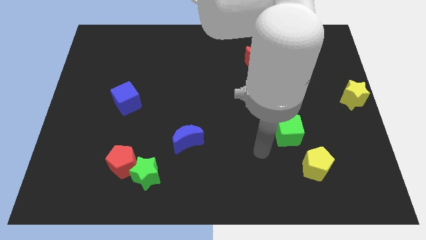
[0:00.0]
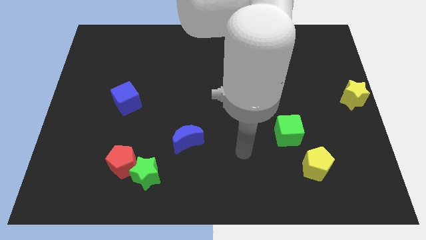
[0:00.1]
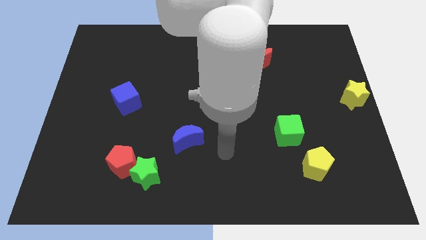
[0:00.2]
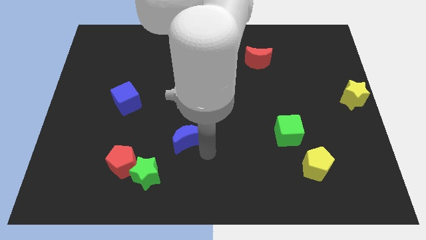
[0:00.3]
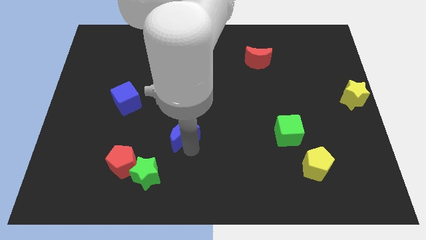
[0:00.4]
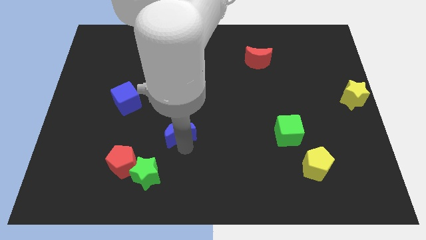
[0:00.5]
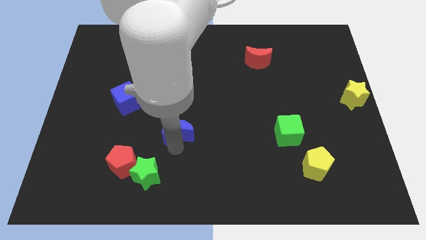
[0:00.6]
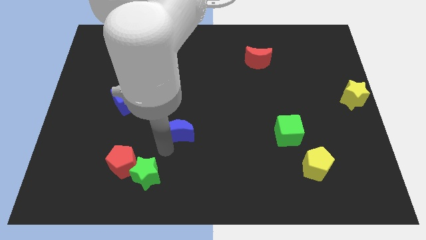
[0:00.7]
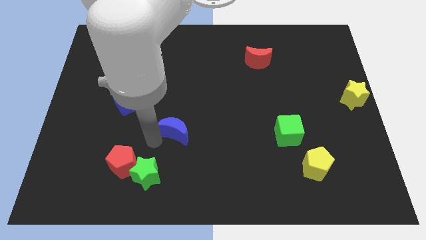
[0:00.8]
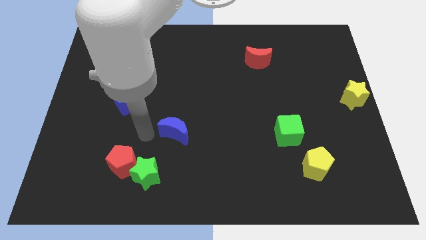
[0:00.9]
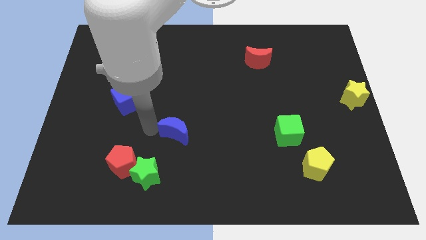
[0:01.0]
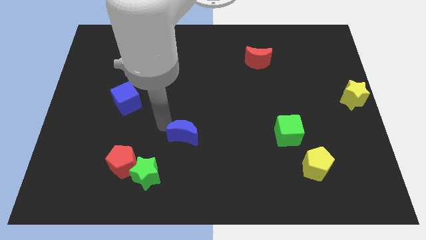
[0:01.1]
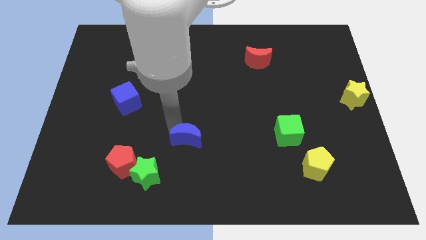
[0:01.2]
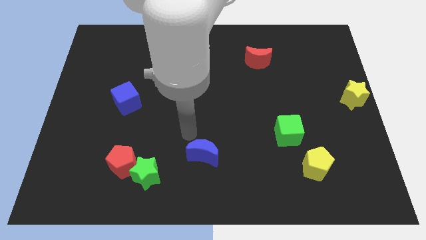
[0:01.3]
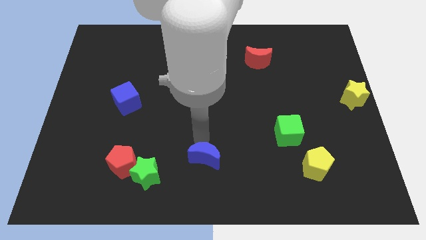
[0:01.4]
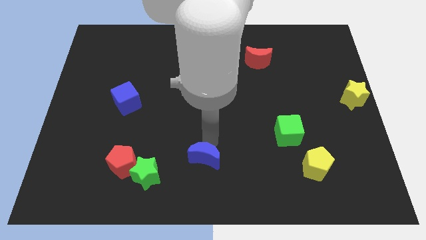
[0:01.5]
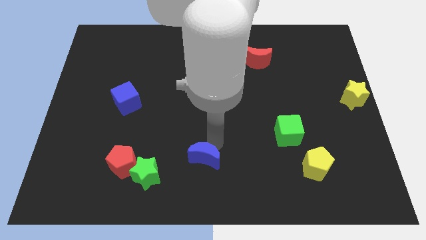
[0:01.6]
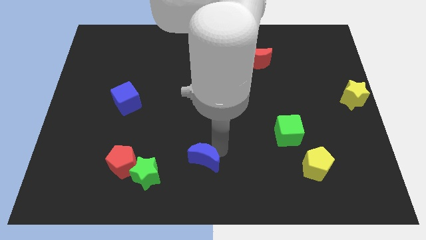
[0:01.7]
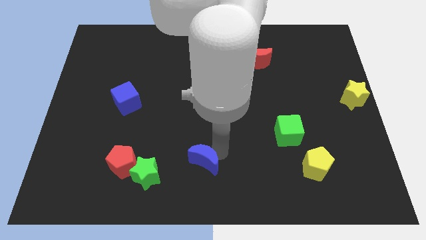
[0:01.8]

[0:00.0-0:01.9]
push the blue crescent to the bottom of the board

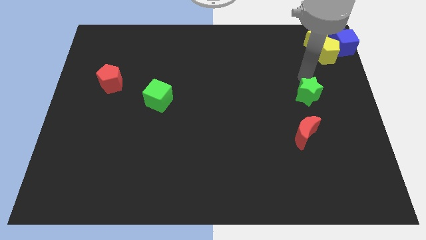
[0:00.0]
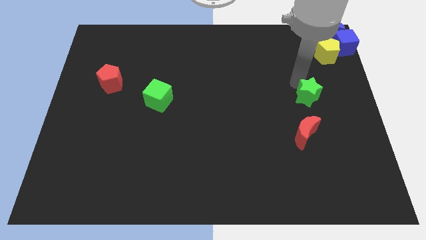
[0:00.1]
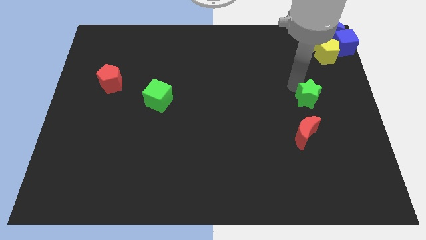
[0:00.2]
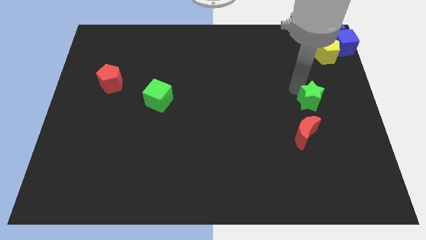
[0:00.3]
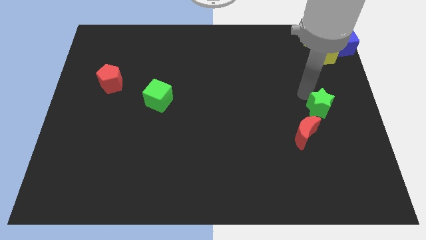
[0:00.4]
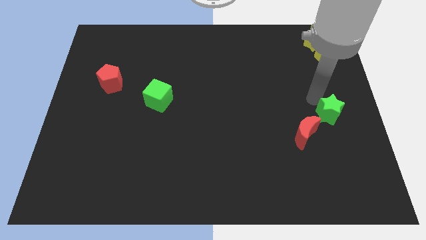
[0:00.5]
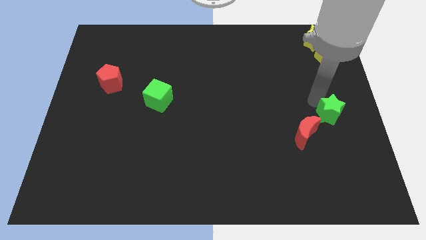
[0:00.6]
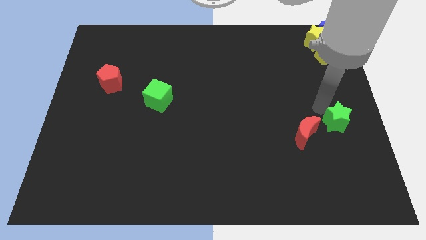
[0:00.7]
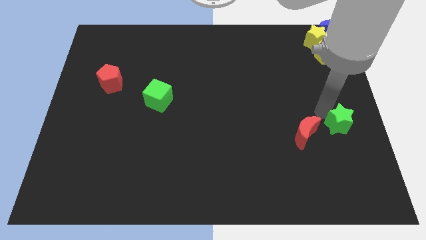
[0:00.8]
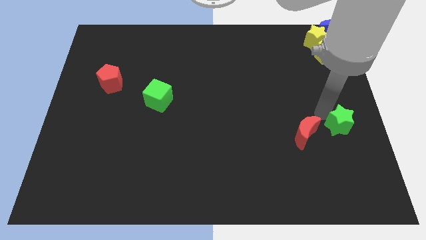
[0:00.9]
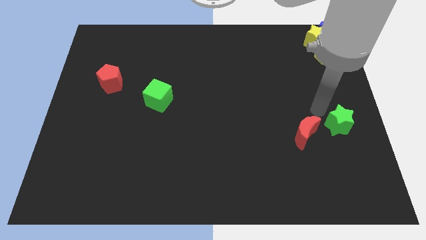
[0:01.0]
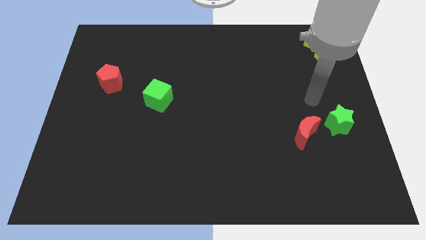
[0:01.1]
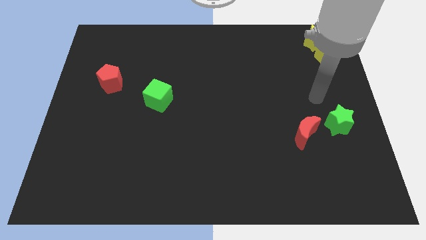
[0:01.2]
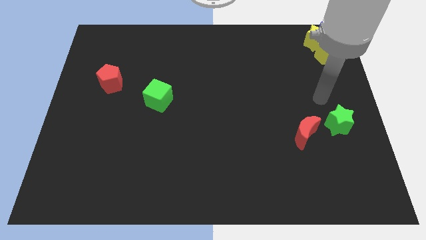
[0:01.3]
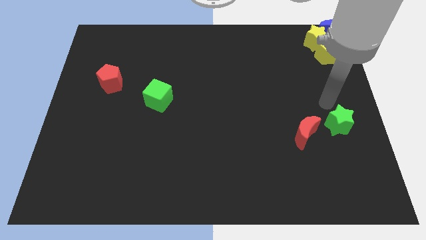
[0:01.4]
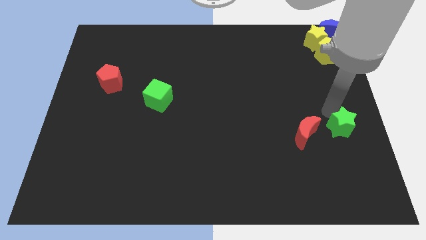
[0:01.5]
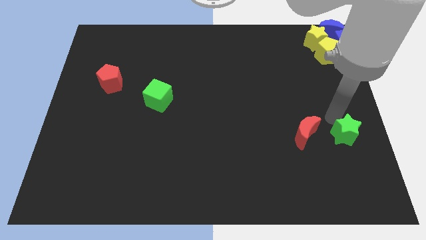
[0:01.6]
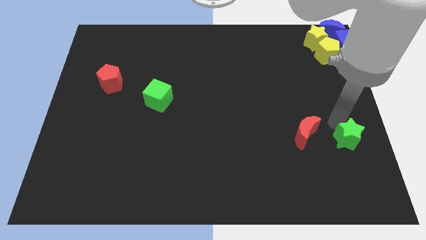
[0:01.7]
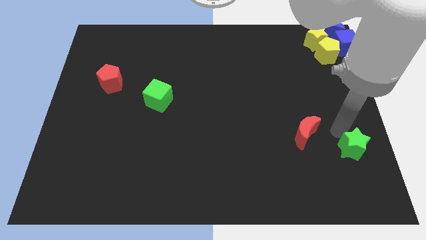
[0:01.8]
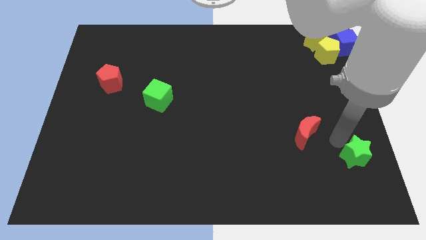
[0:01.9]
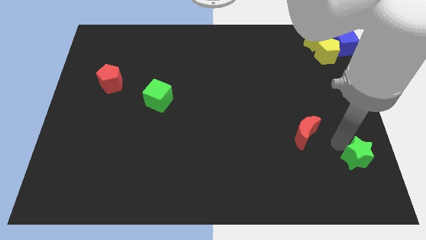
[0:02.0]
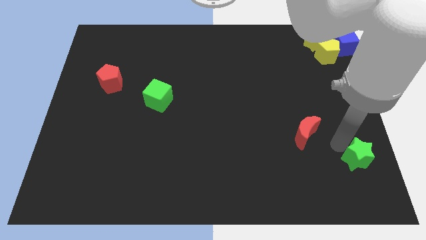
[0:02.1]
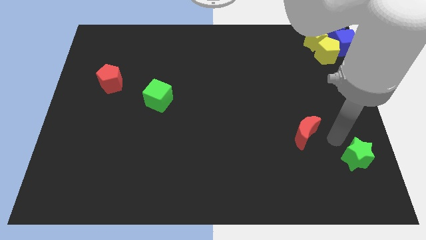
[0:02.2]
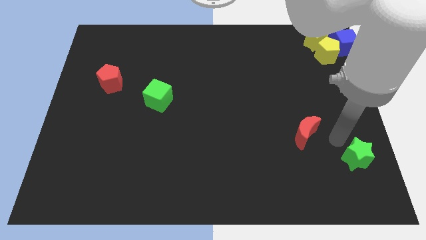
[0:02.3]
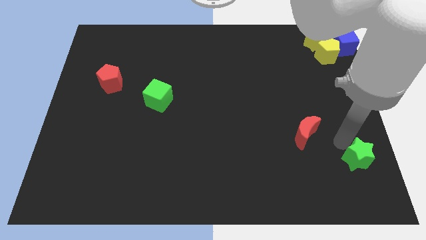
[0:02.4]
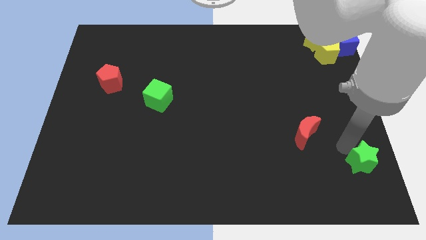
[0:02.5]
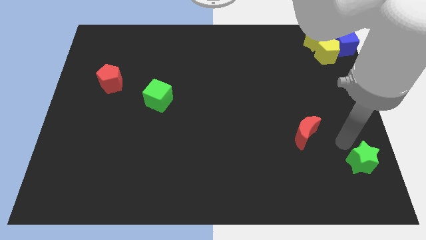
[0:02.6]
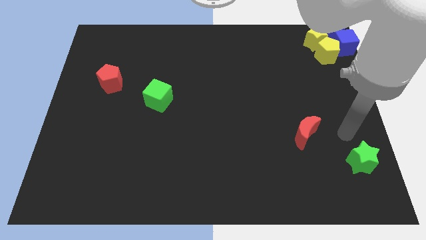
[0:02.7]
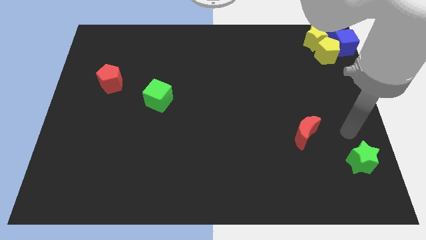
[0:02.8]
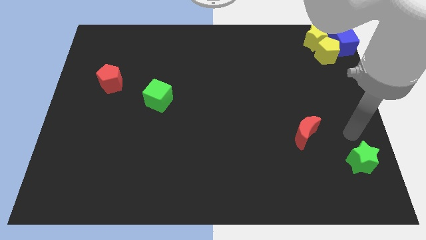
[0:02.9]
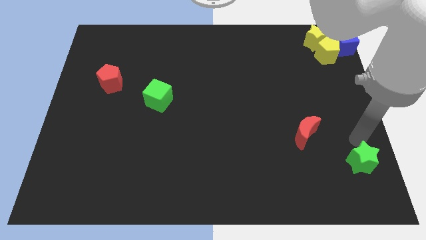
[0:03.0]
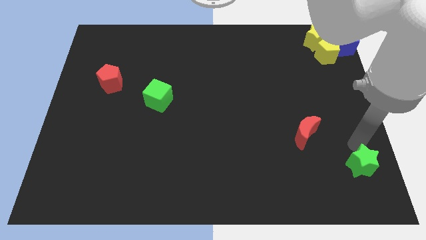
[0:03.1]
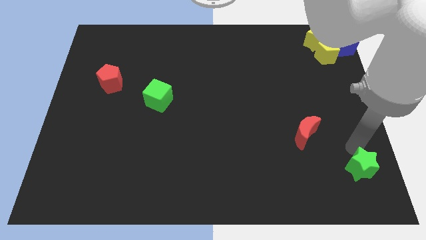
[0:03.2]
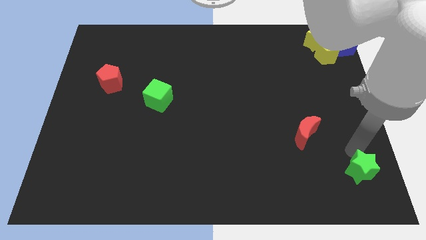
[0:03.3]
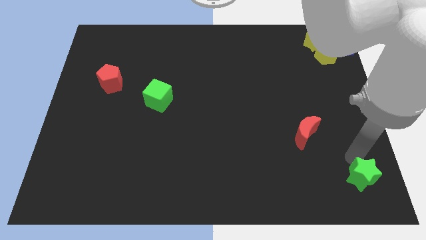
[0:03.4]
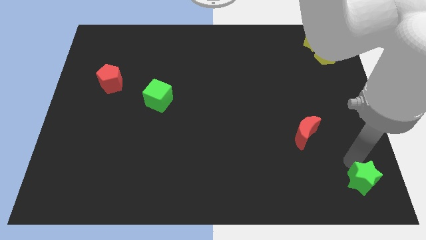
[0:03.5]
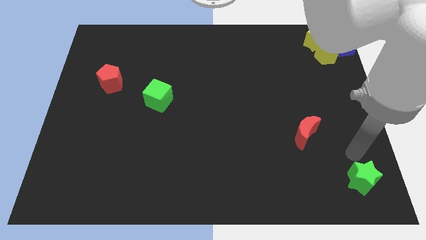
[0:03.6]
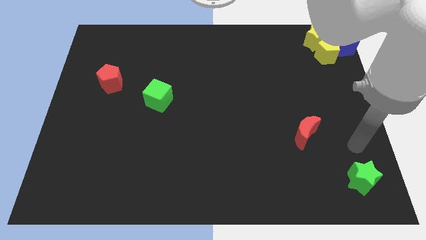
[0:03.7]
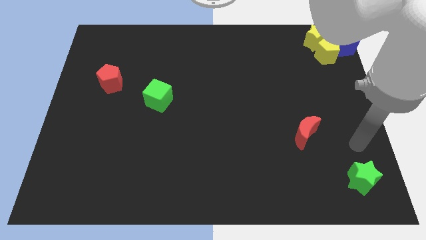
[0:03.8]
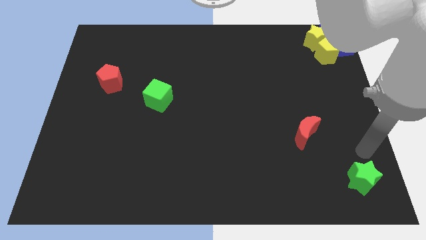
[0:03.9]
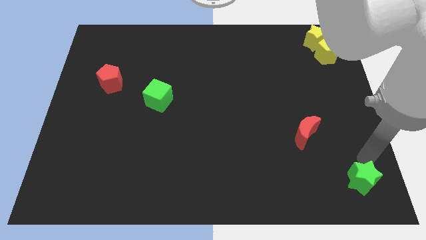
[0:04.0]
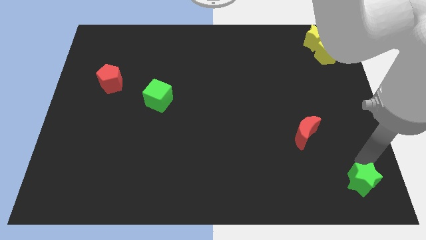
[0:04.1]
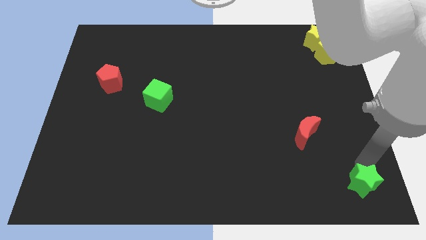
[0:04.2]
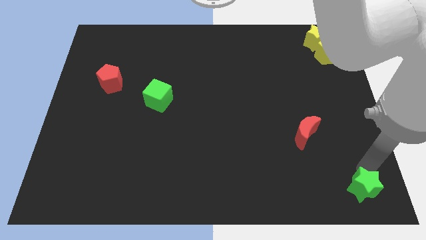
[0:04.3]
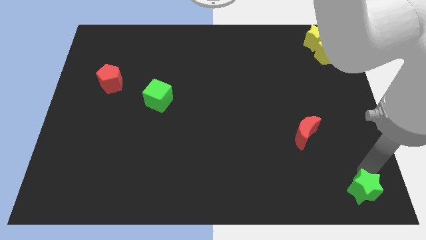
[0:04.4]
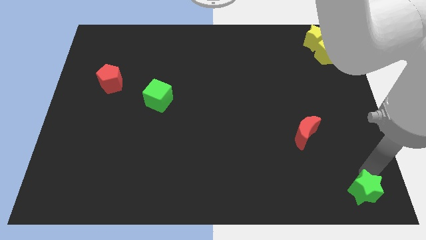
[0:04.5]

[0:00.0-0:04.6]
move the green star to the bottom right

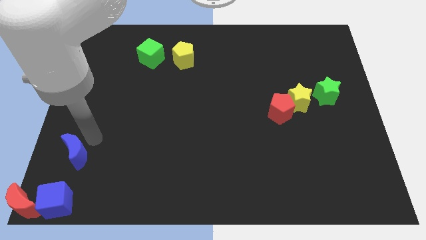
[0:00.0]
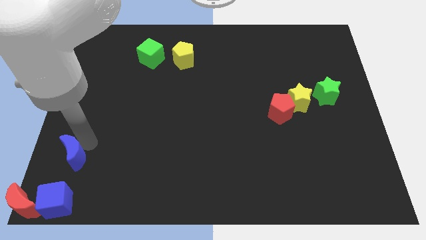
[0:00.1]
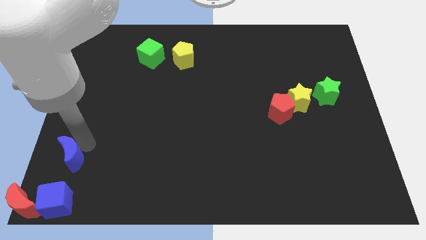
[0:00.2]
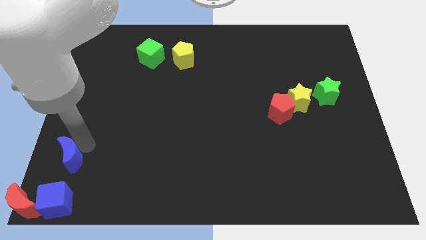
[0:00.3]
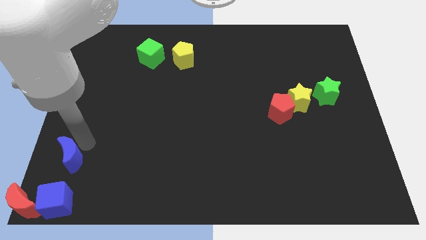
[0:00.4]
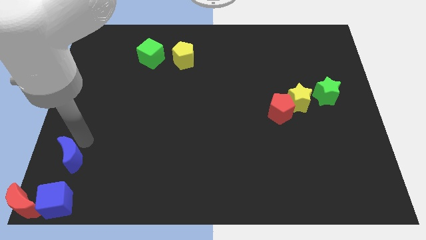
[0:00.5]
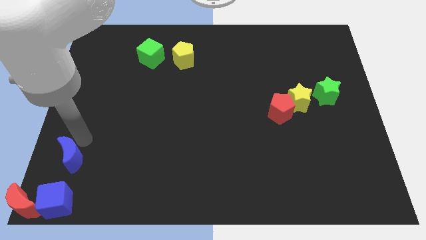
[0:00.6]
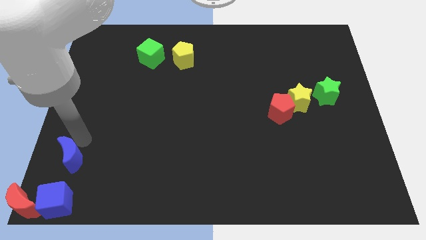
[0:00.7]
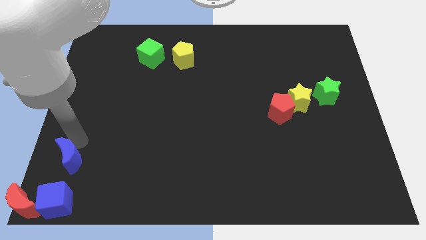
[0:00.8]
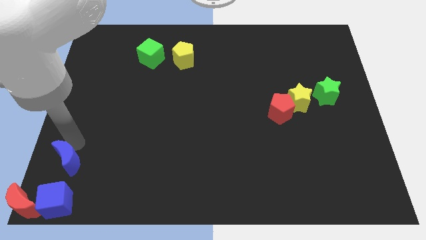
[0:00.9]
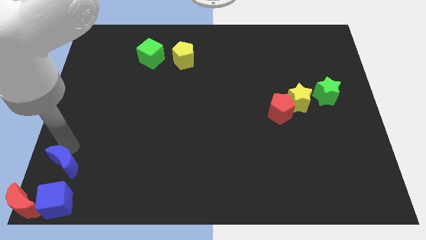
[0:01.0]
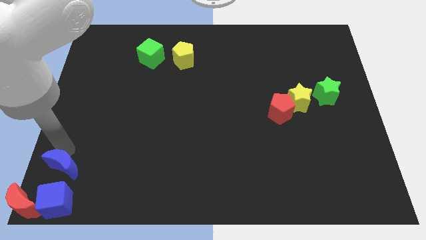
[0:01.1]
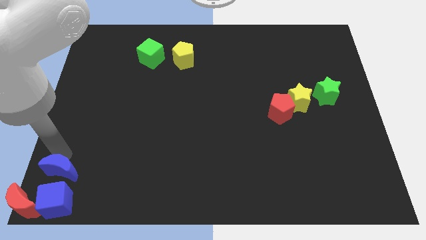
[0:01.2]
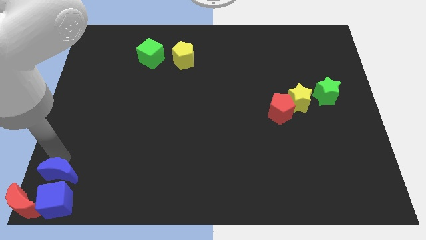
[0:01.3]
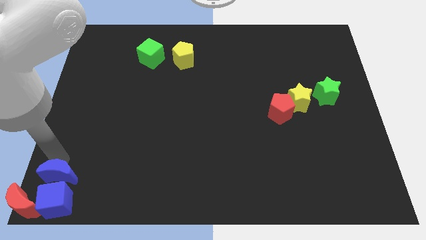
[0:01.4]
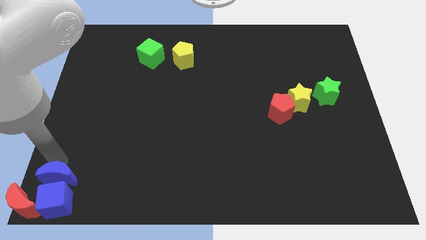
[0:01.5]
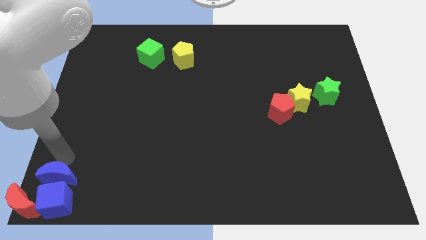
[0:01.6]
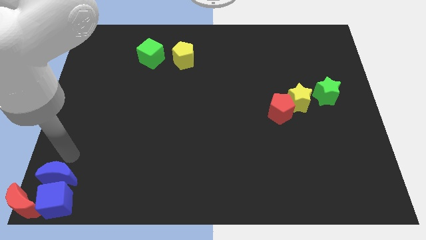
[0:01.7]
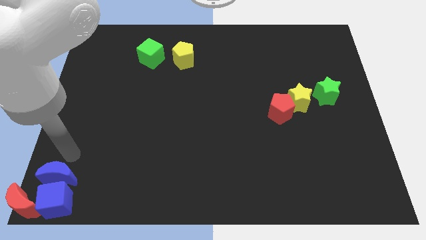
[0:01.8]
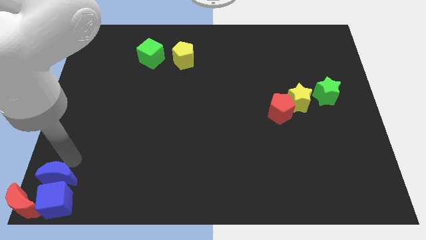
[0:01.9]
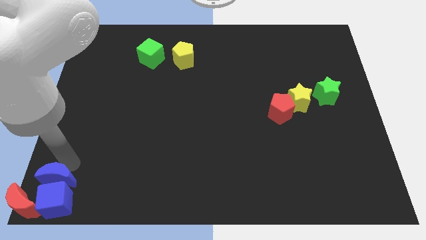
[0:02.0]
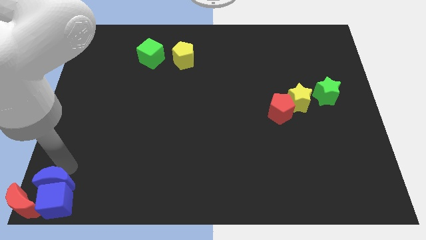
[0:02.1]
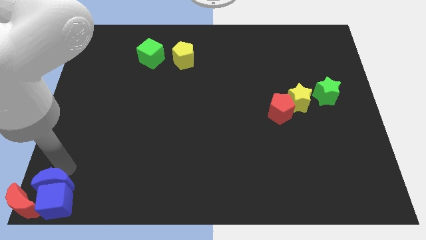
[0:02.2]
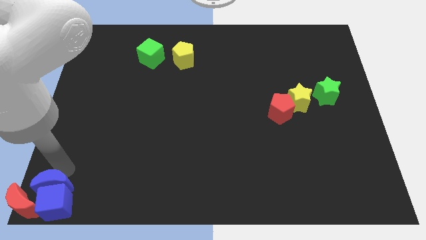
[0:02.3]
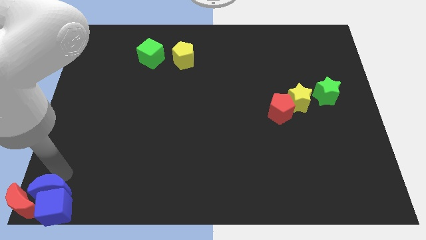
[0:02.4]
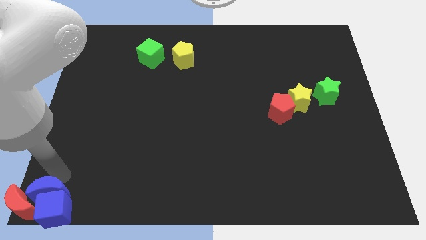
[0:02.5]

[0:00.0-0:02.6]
move the blue crescent into the top side of the blue cube
